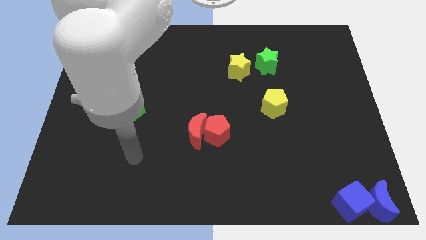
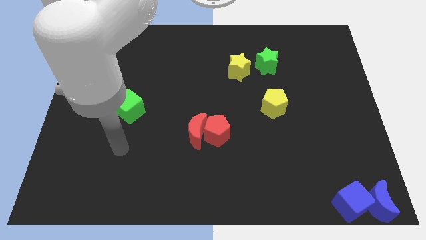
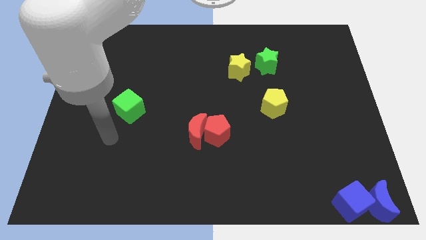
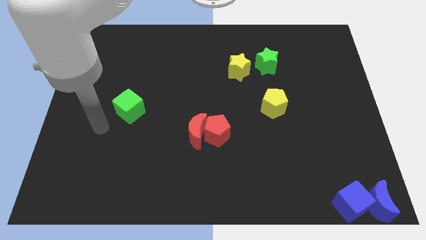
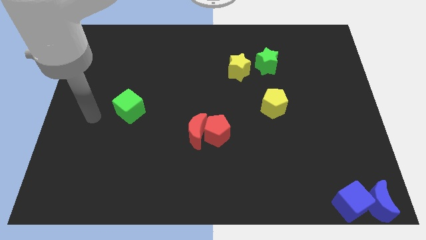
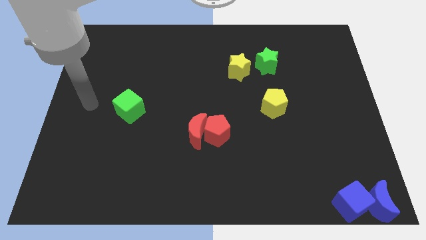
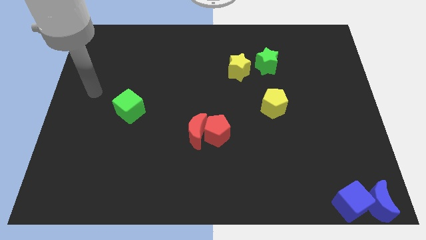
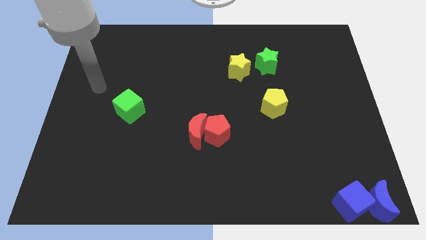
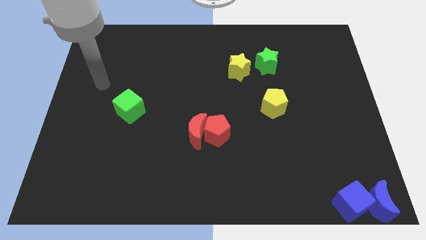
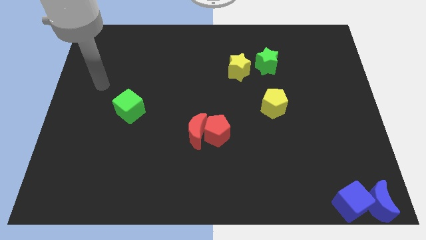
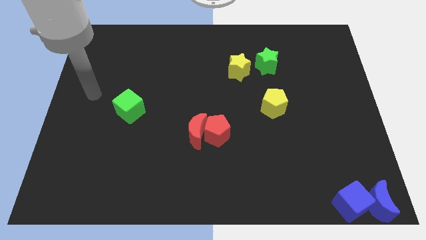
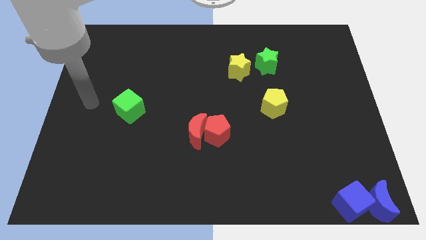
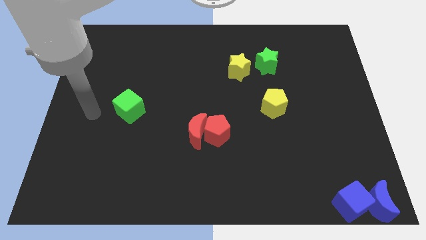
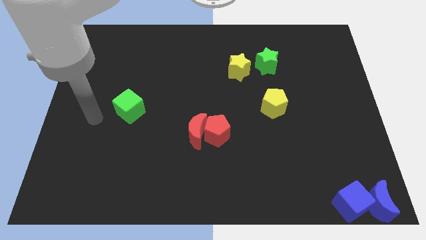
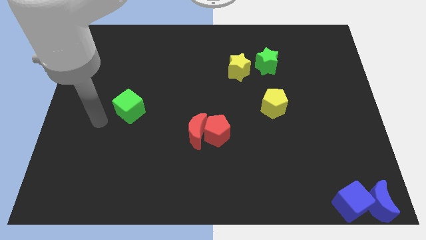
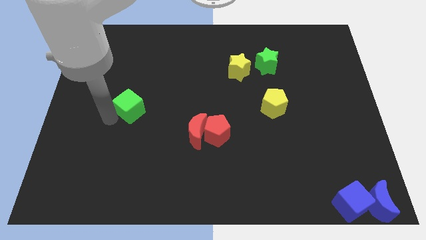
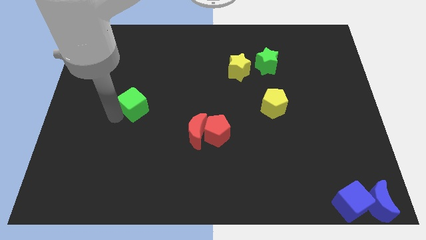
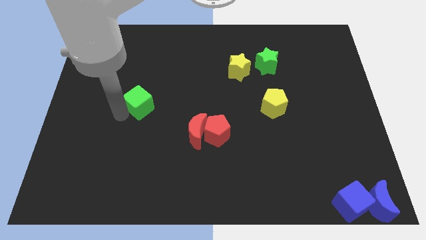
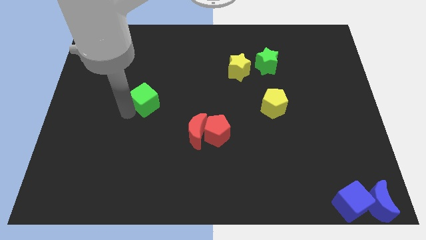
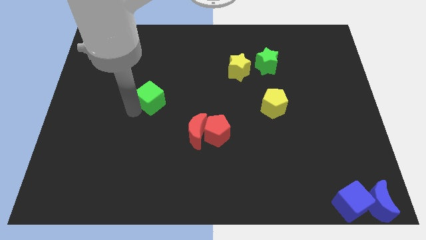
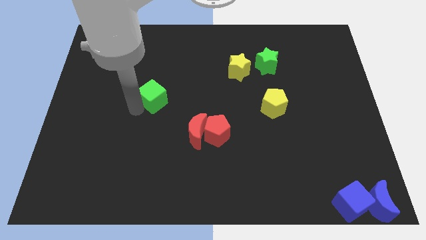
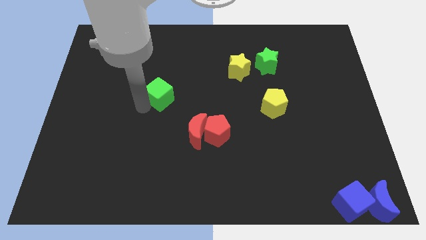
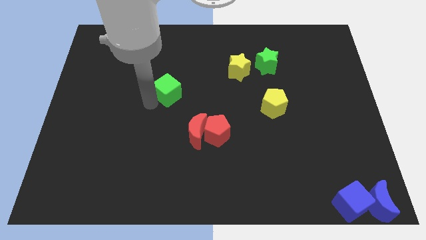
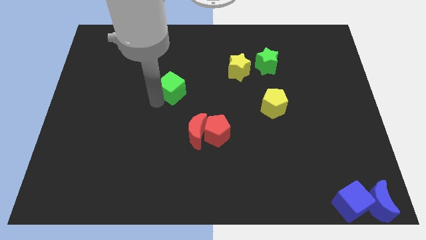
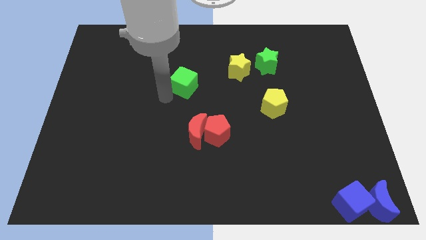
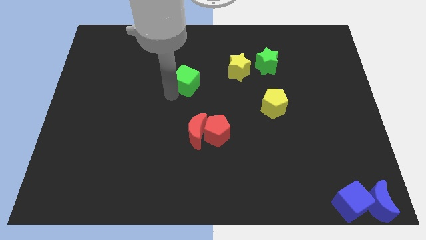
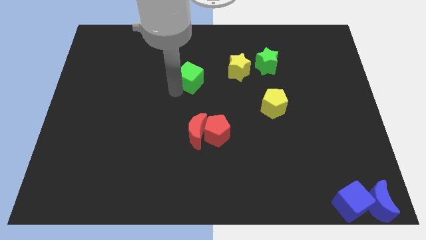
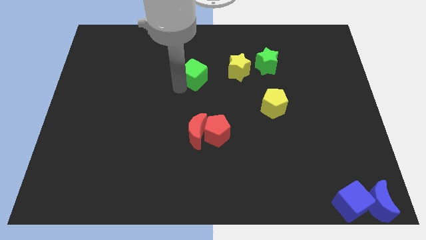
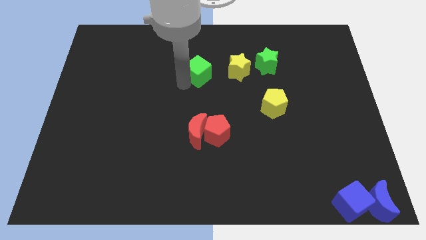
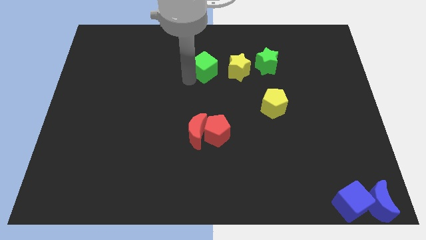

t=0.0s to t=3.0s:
push green cube above red crescent

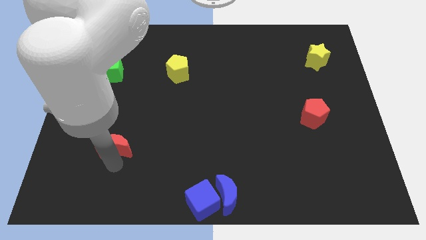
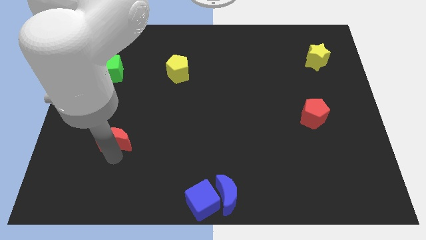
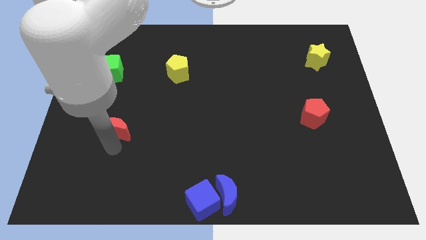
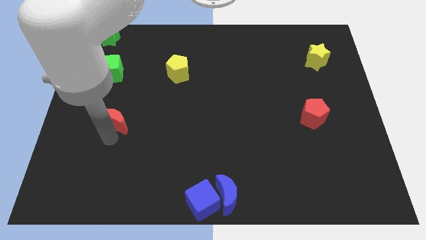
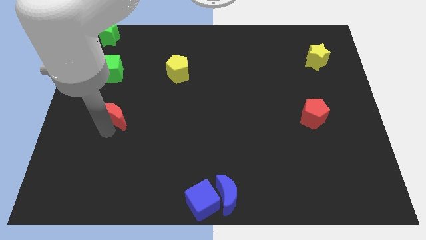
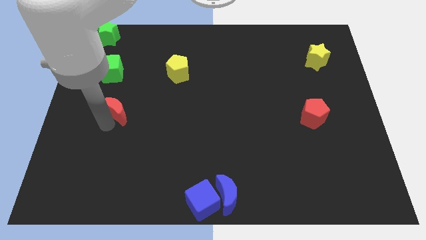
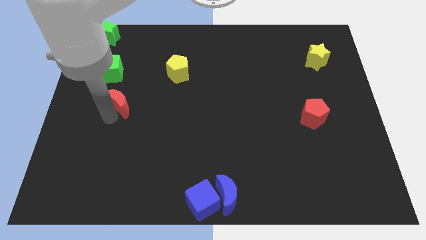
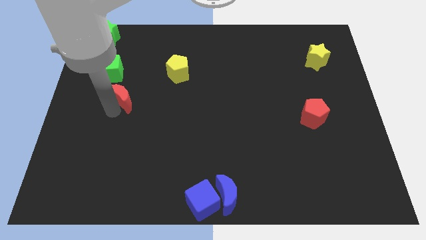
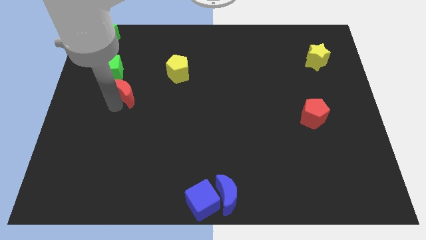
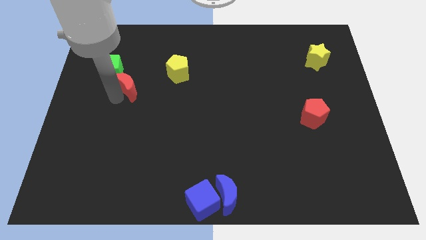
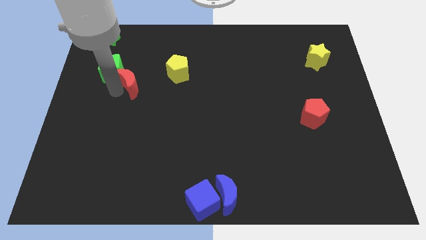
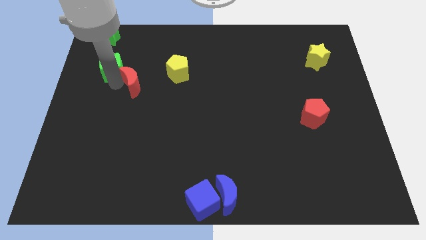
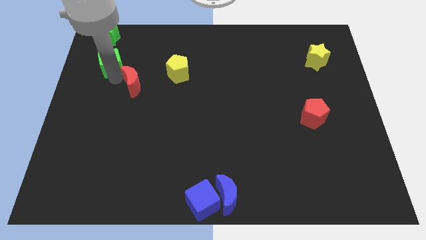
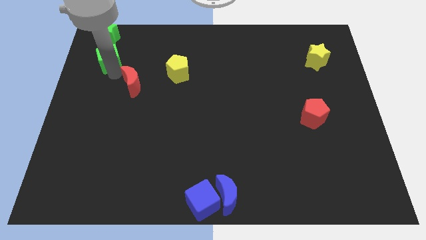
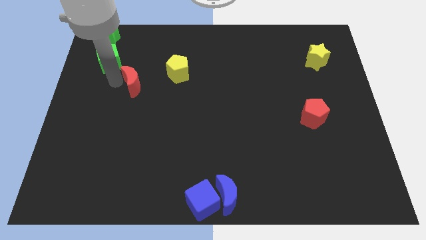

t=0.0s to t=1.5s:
push red moon to the towards the top left

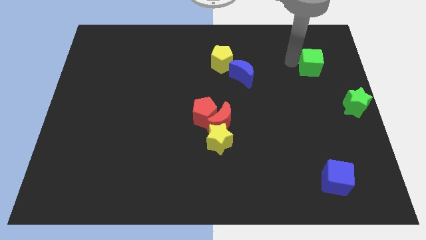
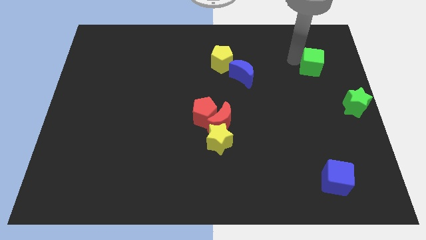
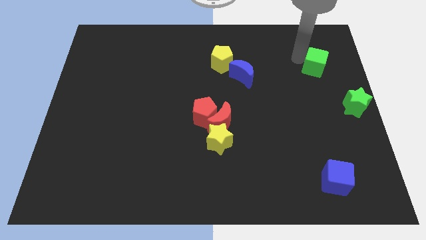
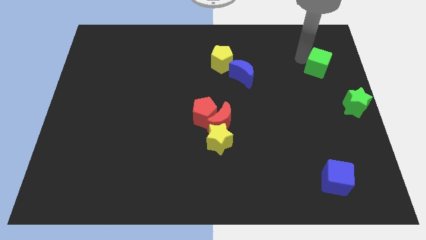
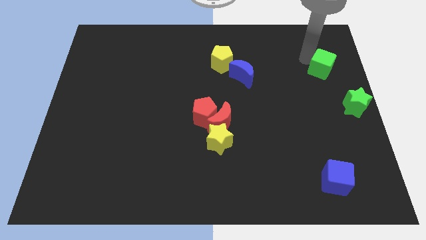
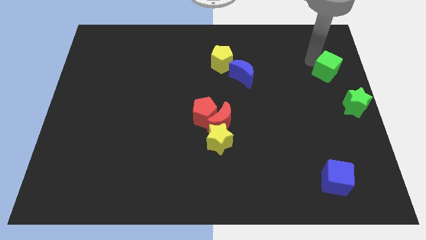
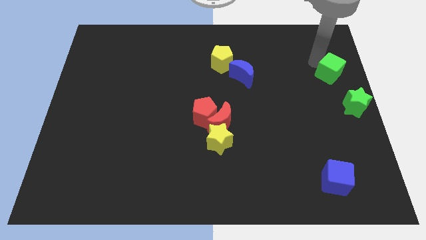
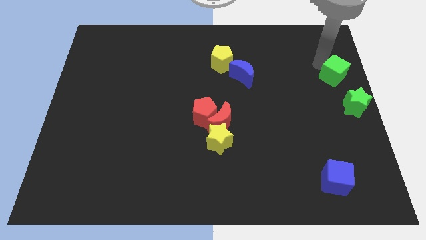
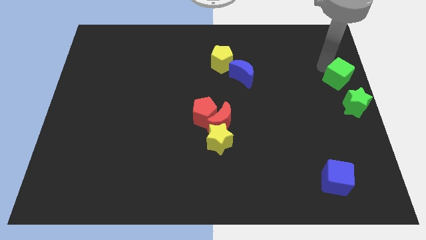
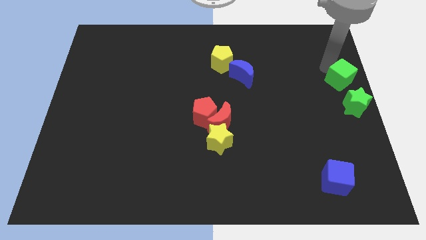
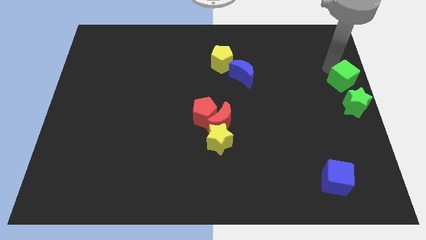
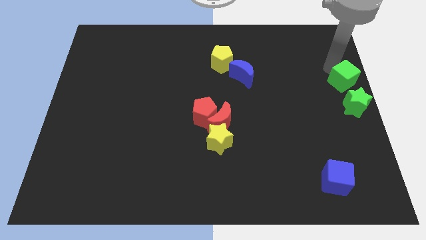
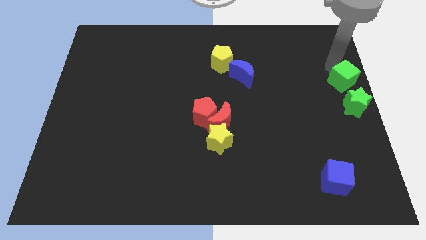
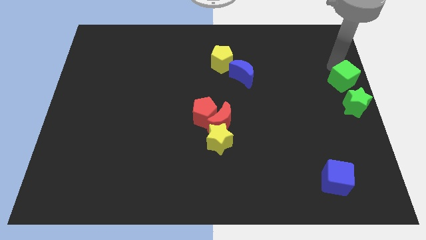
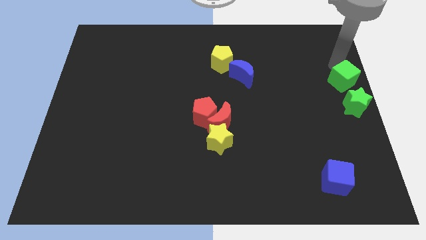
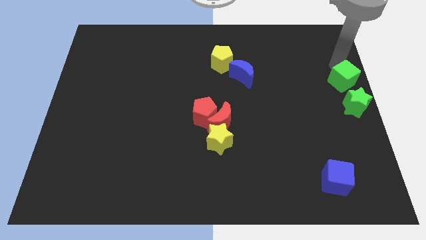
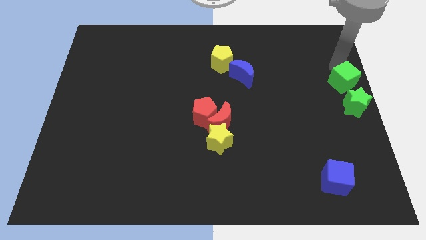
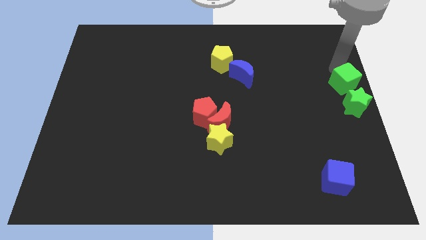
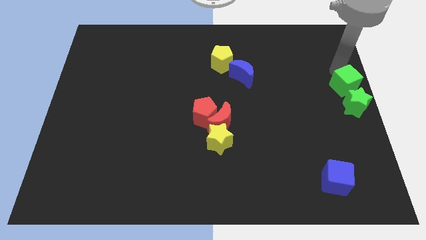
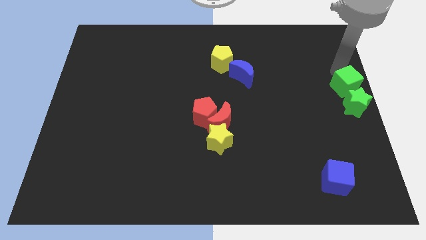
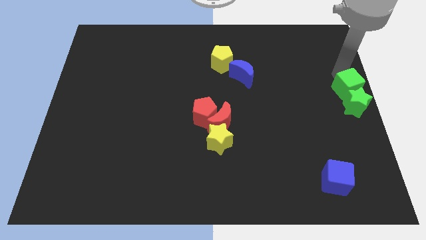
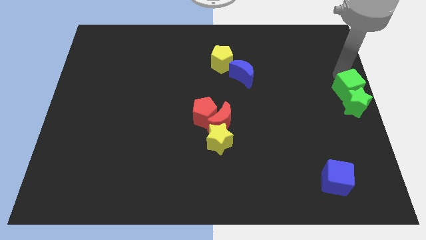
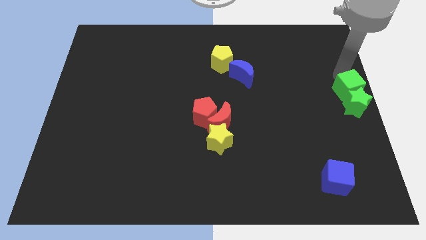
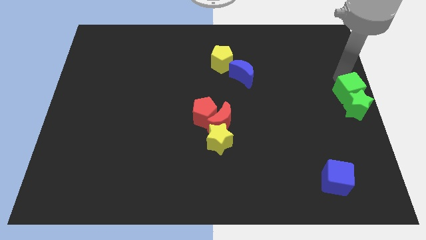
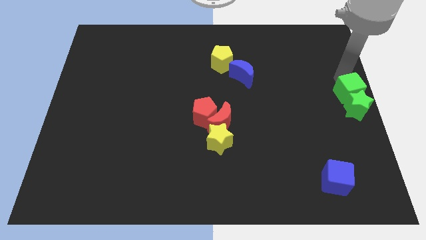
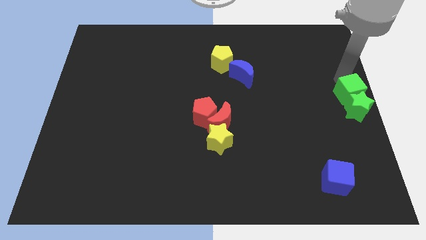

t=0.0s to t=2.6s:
move the green cube near to the green star

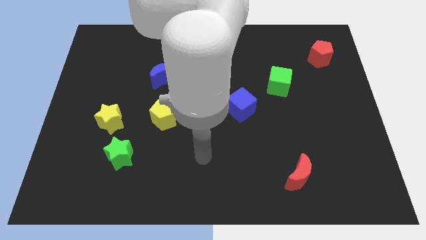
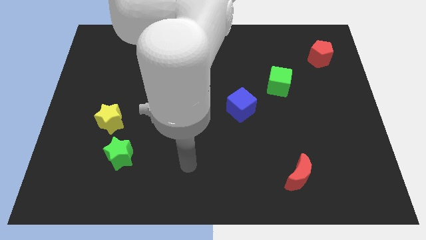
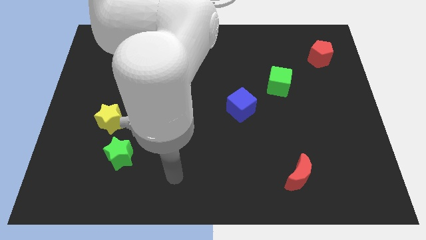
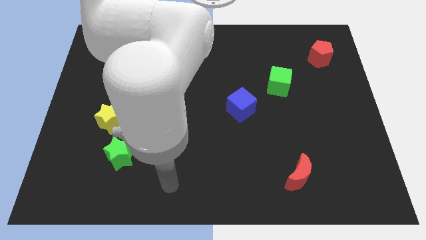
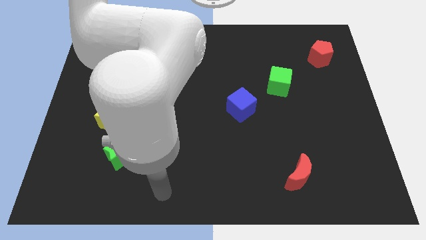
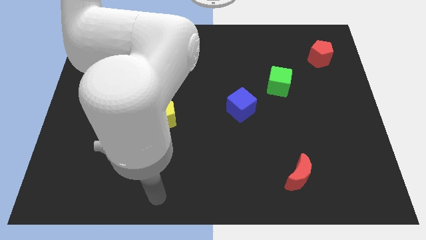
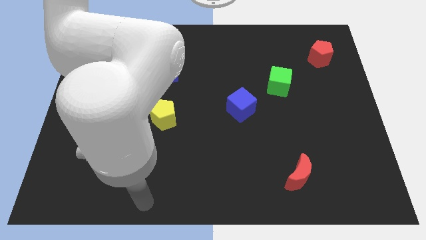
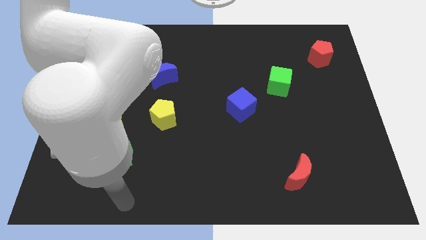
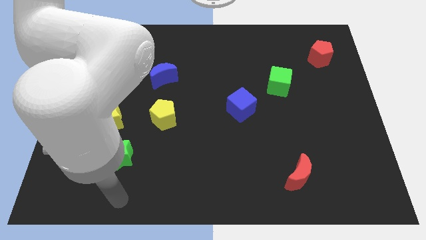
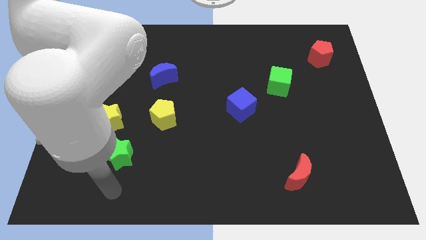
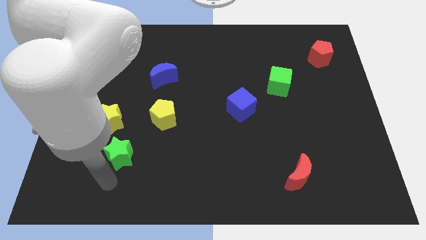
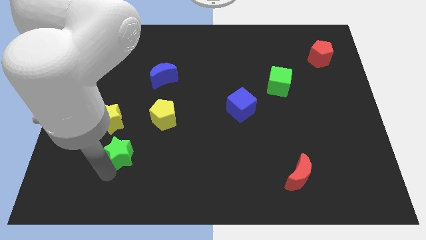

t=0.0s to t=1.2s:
move your arm towards the green star

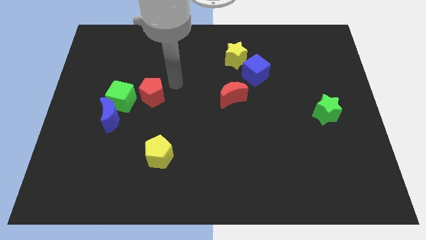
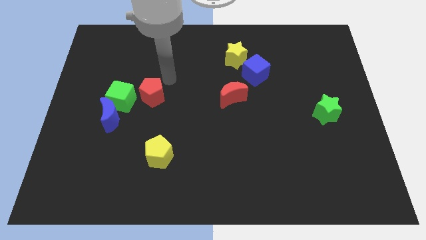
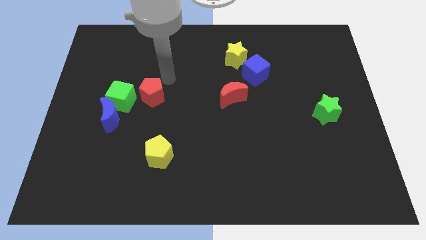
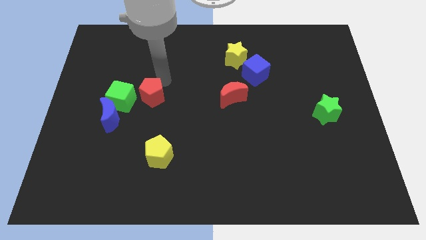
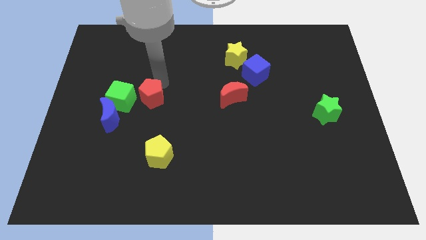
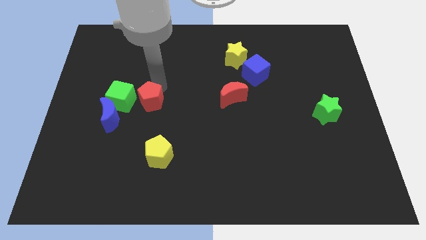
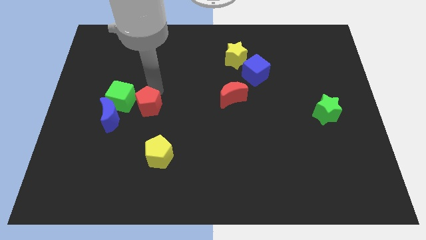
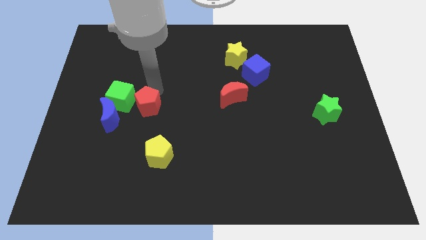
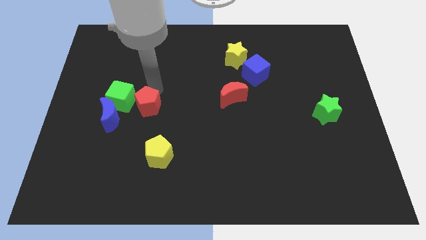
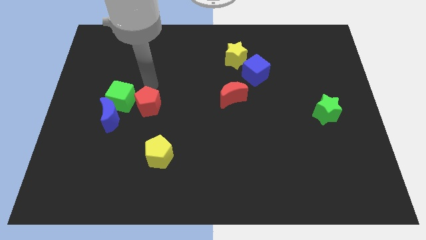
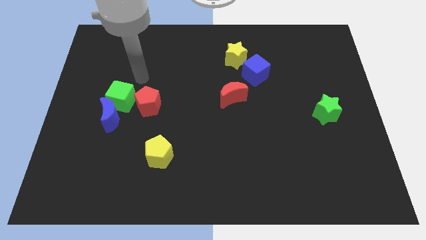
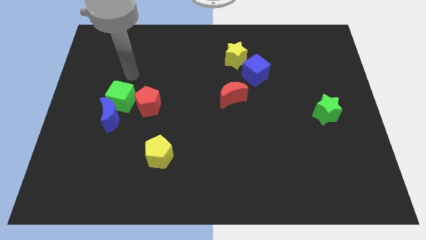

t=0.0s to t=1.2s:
move red pentagon right beside the green cube
